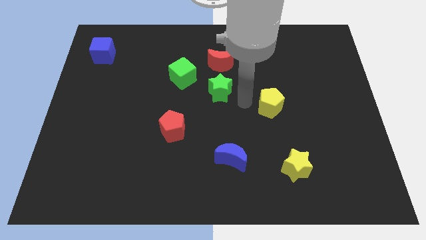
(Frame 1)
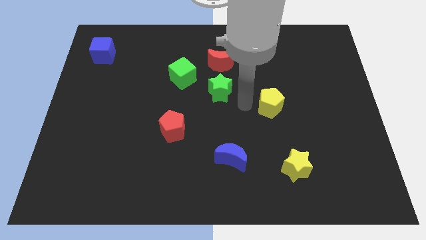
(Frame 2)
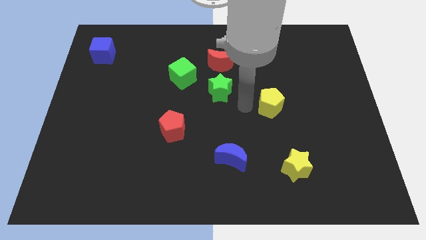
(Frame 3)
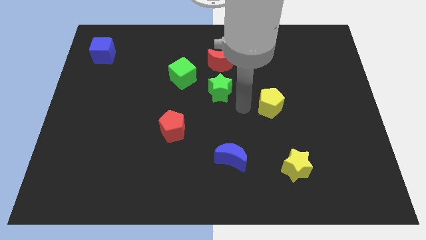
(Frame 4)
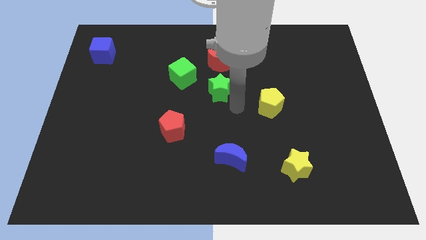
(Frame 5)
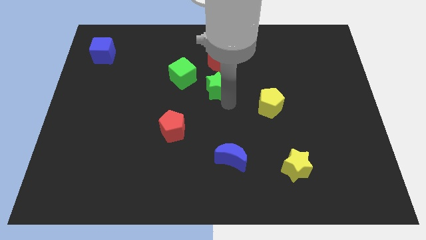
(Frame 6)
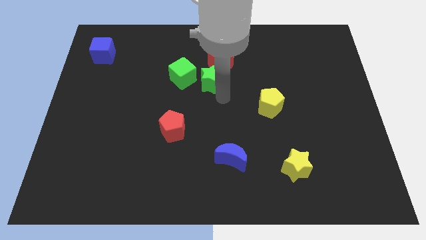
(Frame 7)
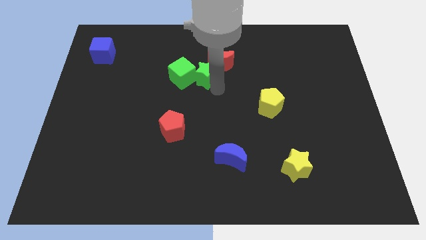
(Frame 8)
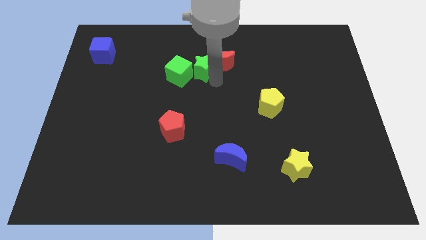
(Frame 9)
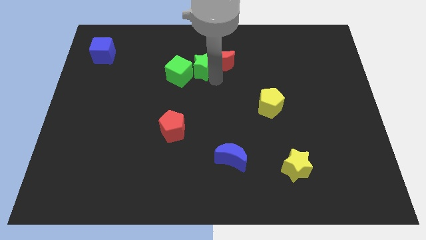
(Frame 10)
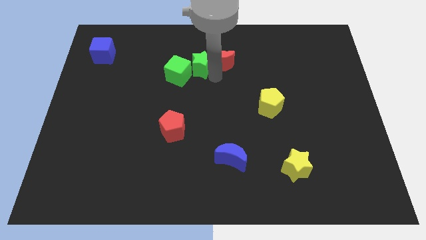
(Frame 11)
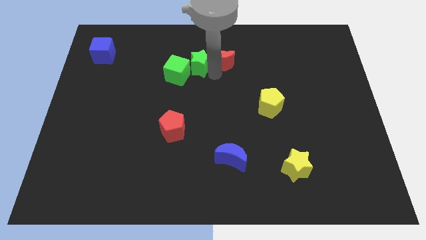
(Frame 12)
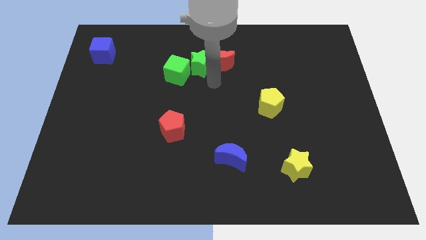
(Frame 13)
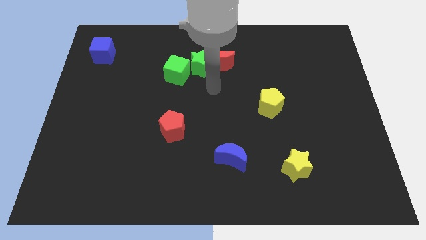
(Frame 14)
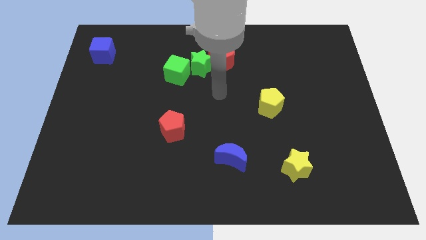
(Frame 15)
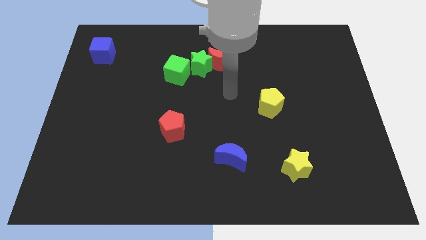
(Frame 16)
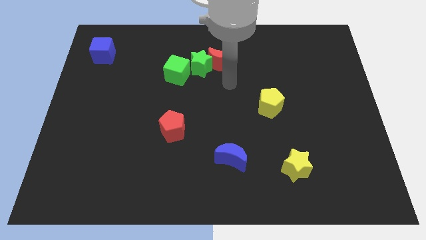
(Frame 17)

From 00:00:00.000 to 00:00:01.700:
push the green star in between of green cube and red moon

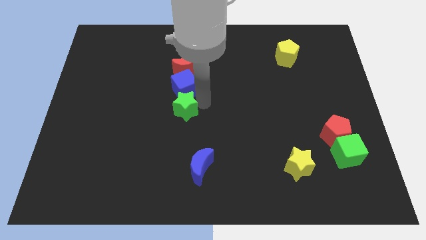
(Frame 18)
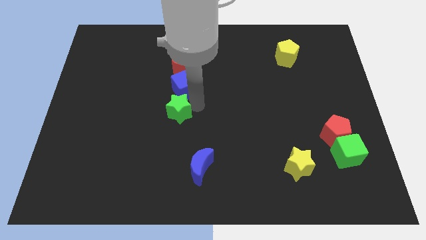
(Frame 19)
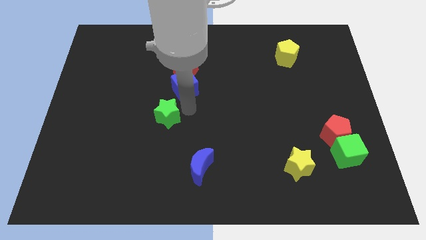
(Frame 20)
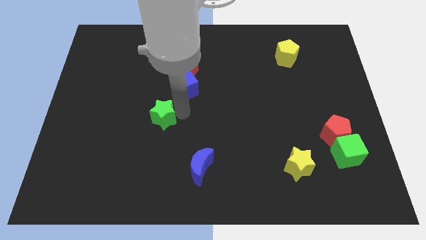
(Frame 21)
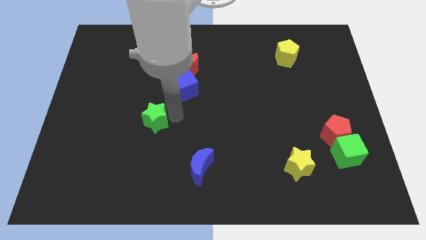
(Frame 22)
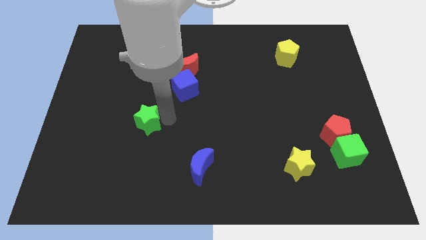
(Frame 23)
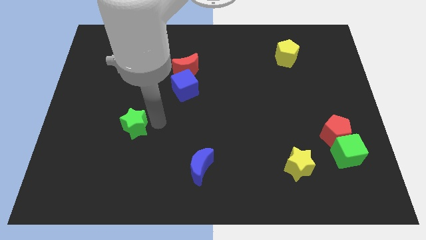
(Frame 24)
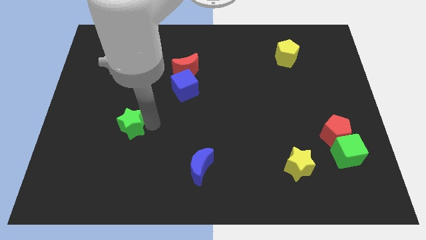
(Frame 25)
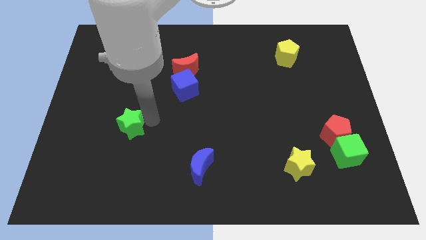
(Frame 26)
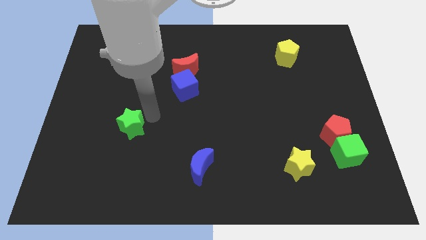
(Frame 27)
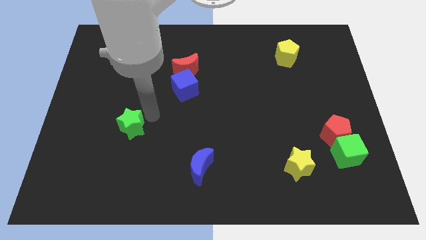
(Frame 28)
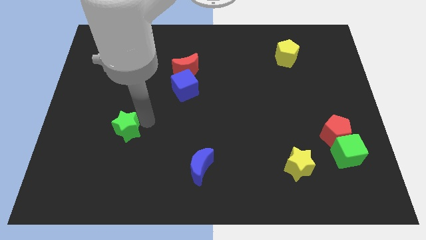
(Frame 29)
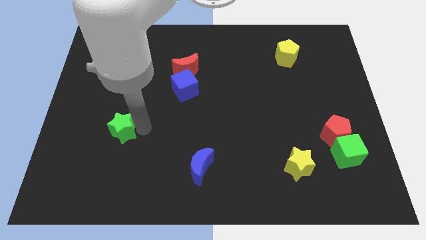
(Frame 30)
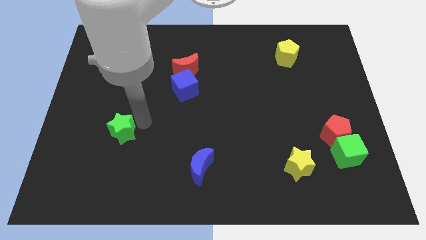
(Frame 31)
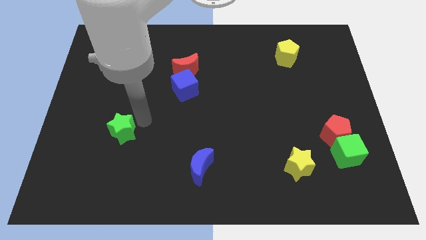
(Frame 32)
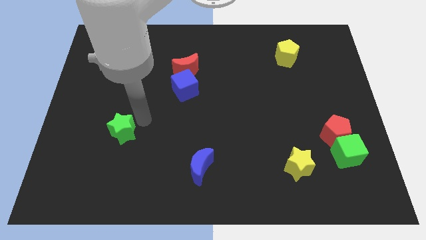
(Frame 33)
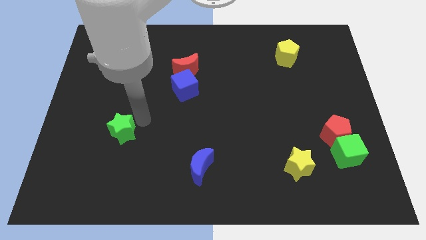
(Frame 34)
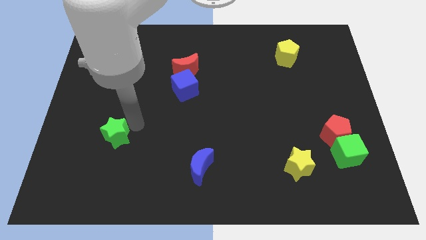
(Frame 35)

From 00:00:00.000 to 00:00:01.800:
move the green star diagonally to the blue moon

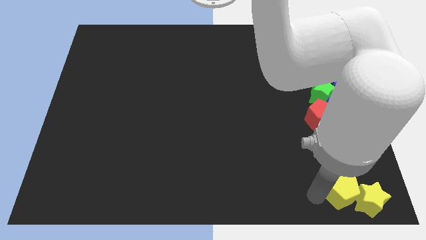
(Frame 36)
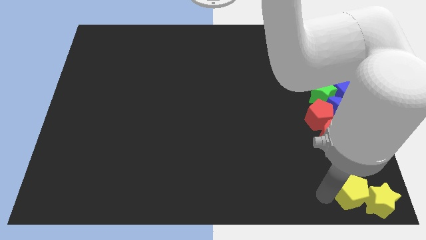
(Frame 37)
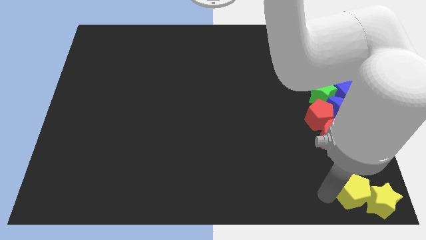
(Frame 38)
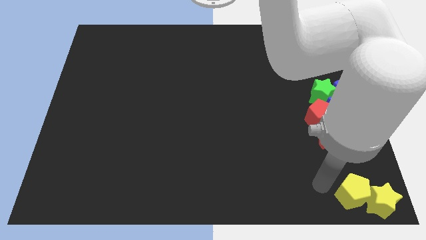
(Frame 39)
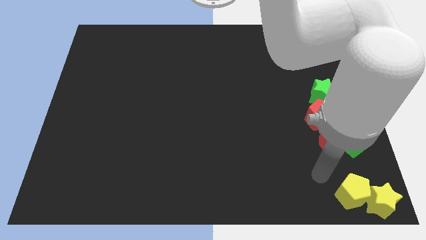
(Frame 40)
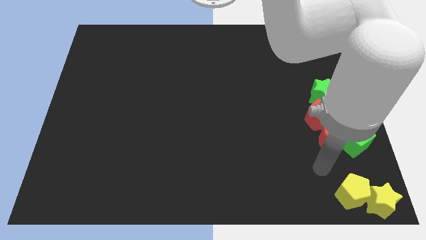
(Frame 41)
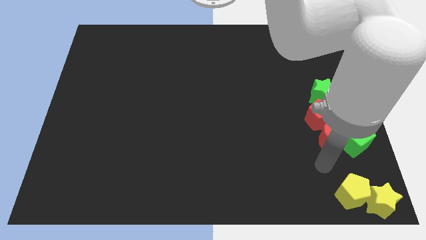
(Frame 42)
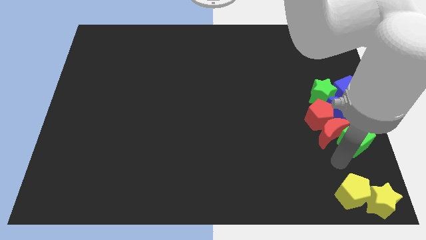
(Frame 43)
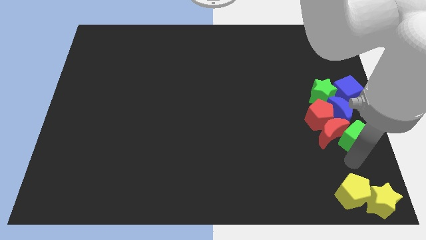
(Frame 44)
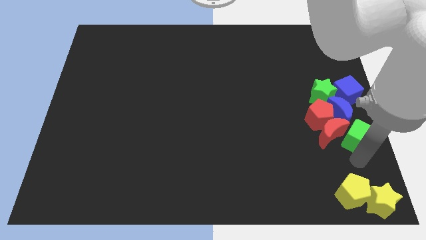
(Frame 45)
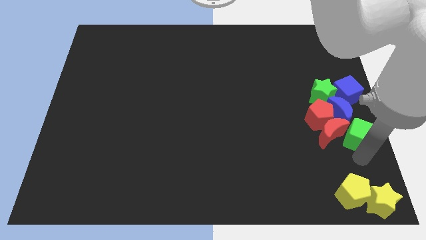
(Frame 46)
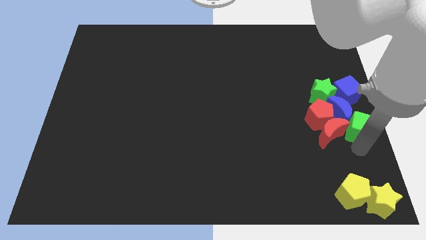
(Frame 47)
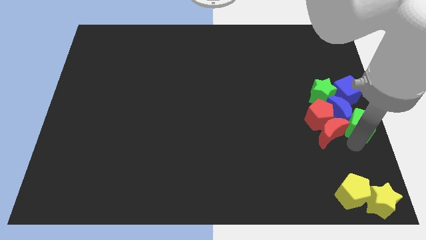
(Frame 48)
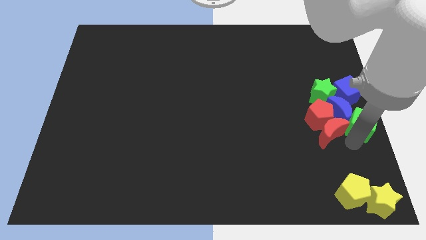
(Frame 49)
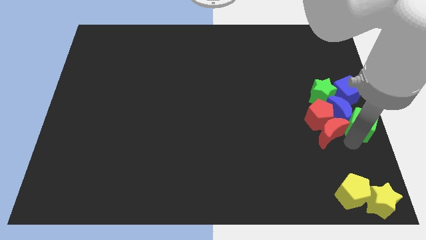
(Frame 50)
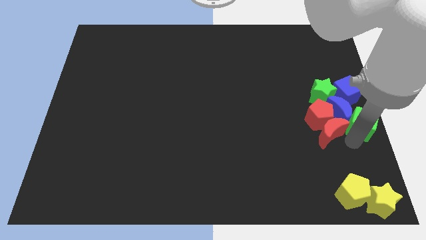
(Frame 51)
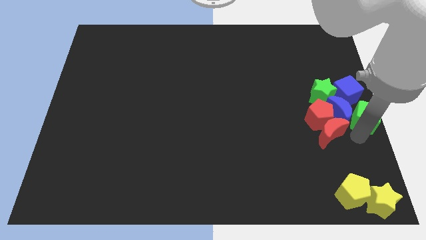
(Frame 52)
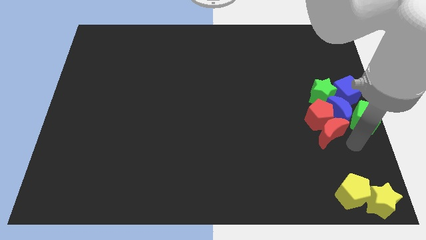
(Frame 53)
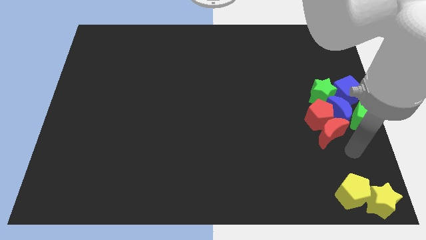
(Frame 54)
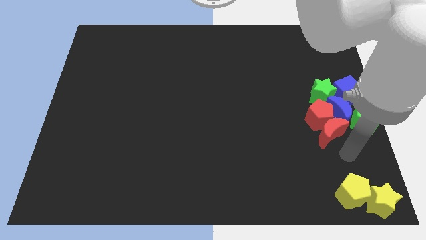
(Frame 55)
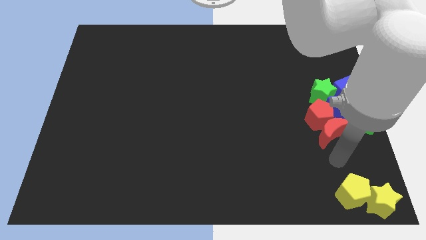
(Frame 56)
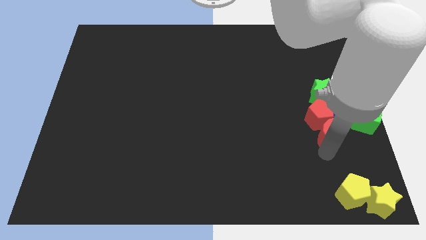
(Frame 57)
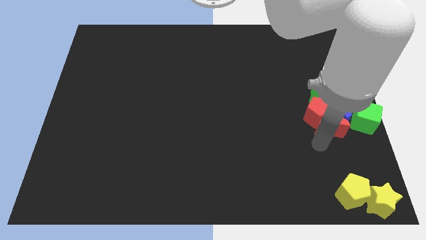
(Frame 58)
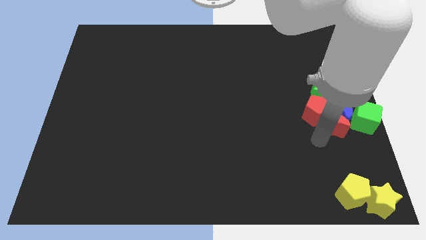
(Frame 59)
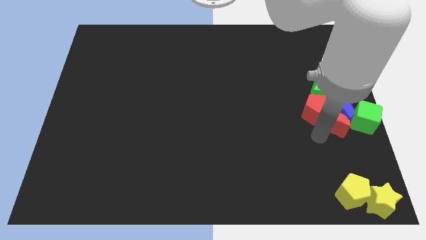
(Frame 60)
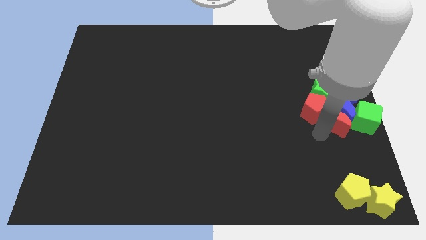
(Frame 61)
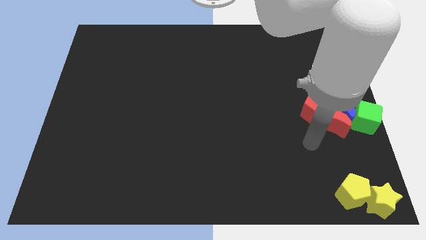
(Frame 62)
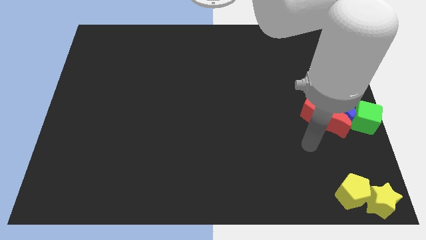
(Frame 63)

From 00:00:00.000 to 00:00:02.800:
make a group of all the blocks except yellow blocks

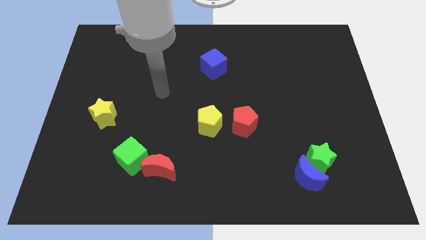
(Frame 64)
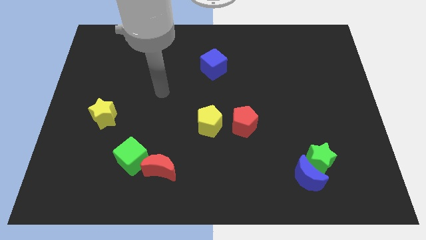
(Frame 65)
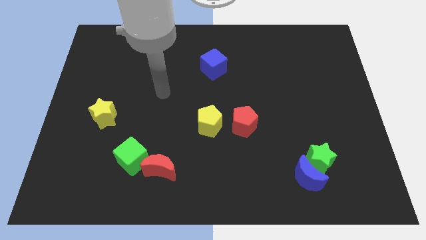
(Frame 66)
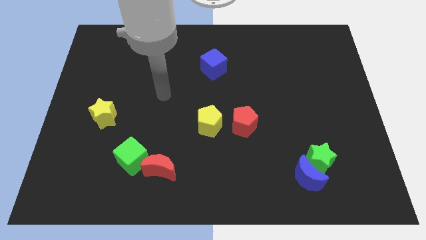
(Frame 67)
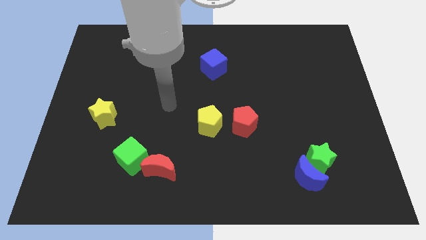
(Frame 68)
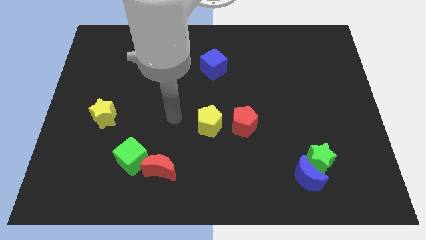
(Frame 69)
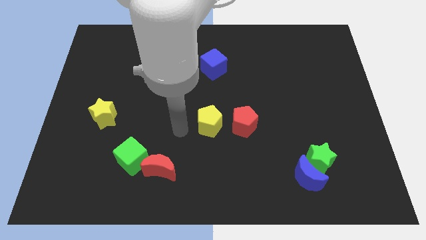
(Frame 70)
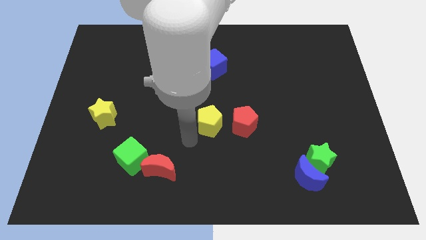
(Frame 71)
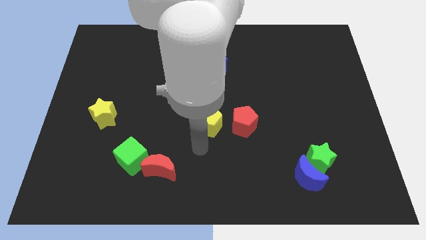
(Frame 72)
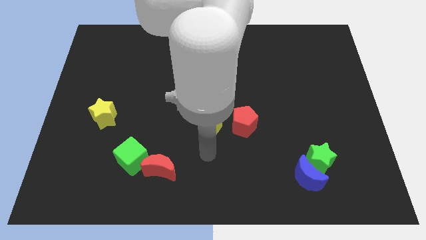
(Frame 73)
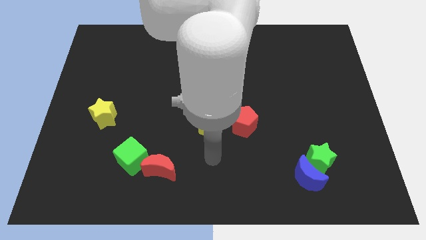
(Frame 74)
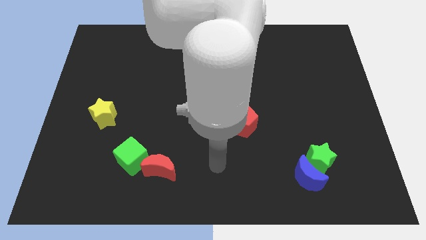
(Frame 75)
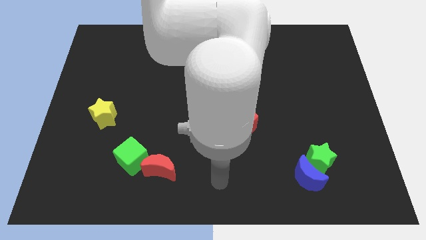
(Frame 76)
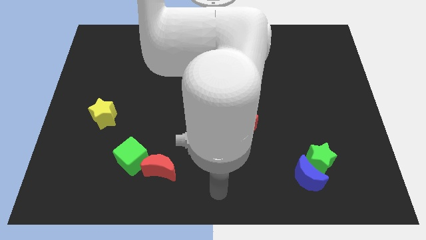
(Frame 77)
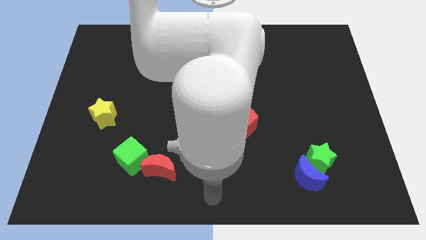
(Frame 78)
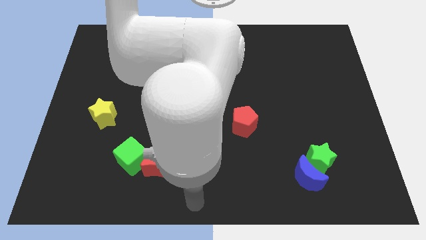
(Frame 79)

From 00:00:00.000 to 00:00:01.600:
place your arm at the bottom center

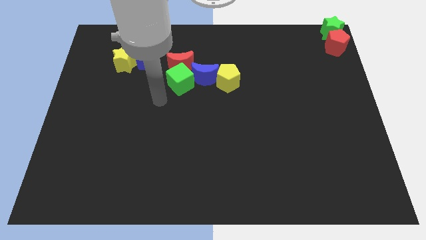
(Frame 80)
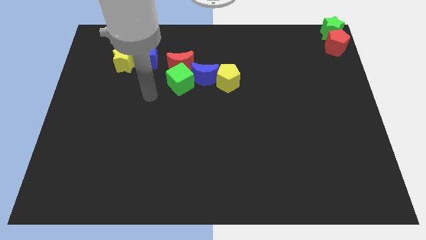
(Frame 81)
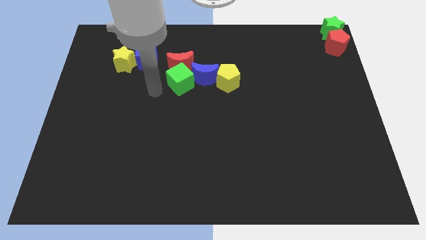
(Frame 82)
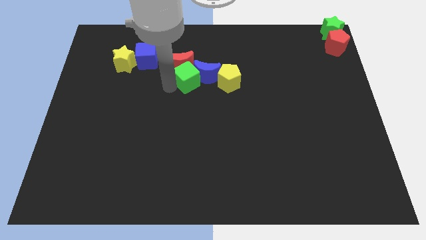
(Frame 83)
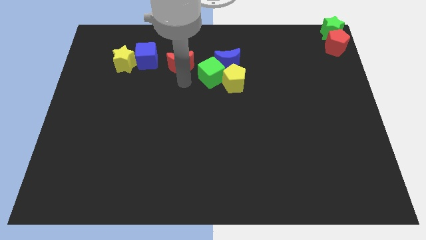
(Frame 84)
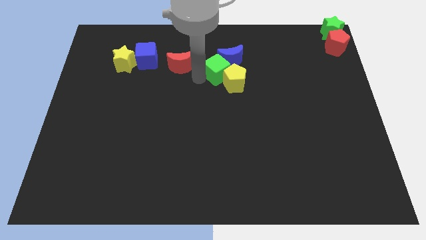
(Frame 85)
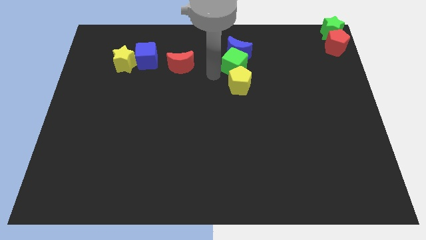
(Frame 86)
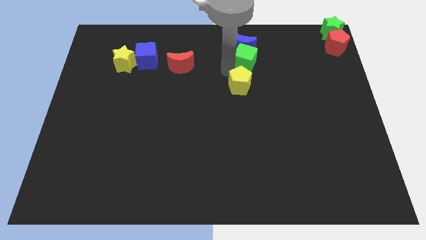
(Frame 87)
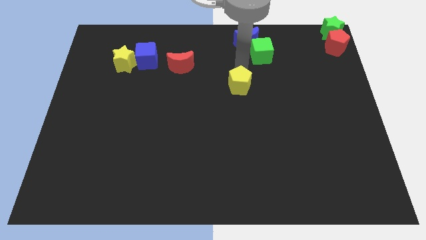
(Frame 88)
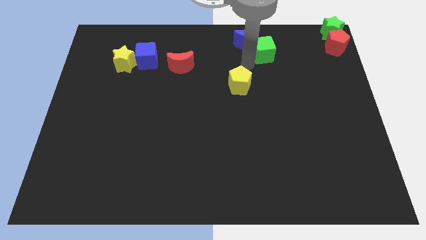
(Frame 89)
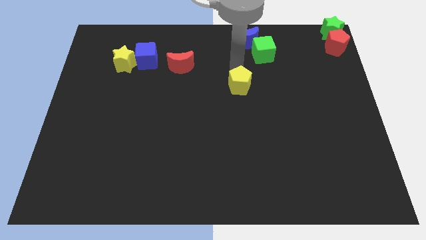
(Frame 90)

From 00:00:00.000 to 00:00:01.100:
push the blue moon with the green cube
